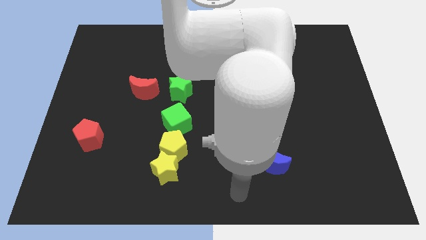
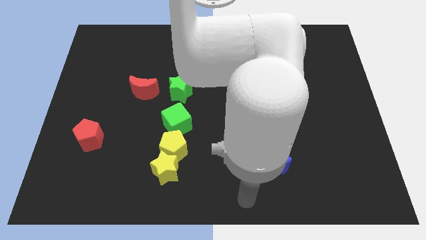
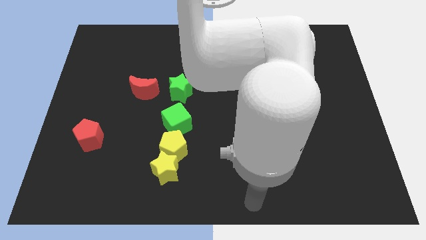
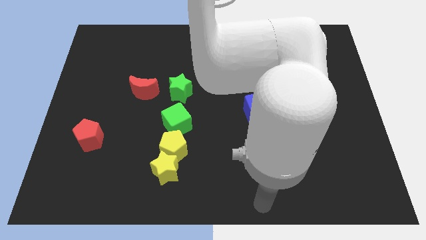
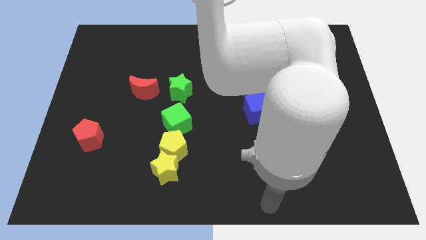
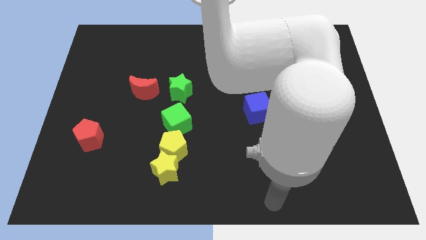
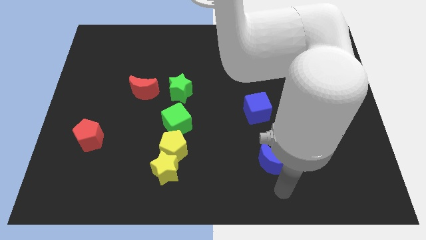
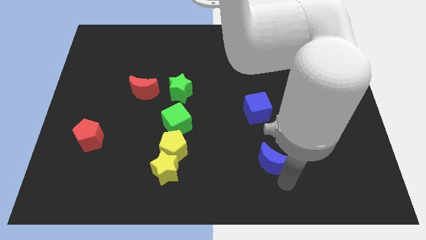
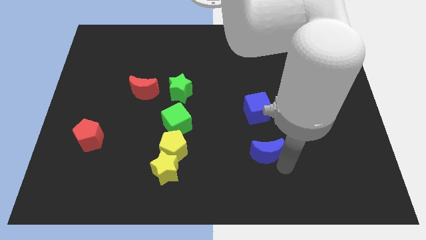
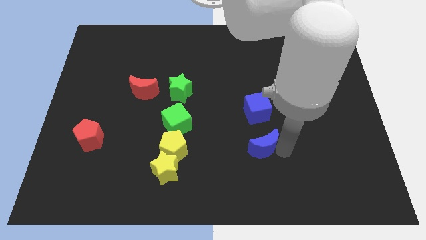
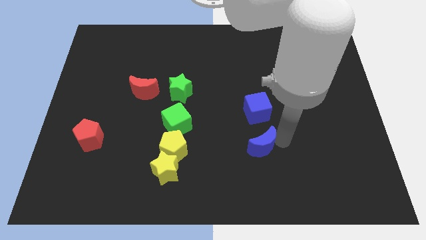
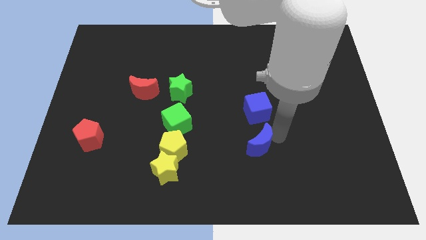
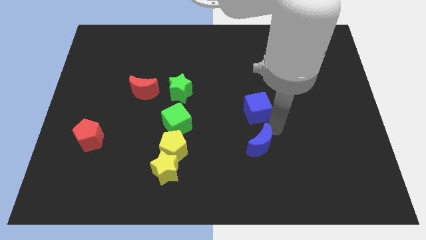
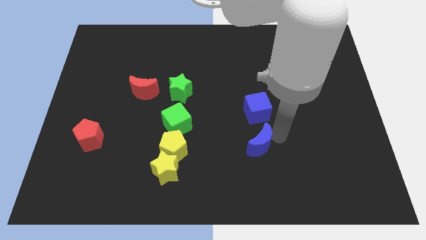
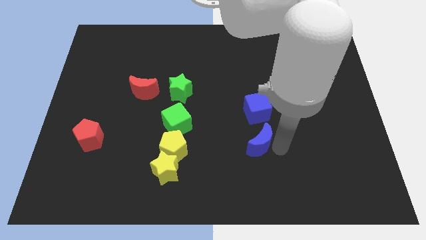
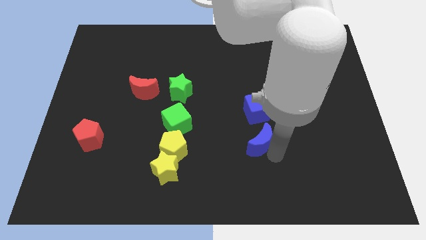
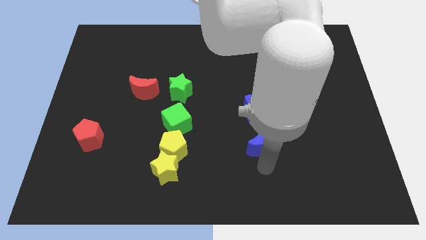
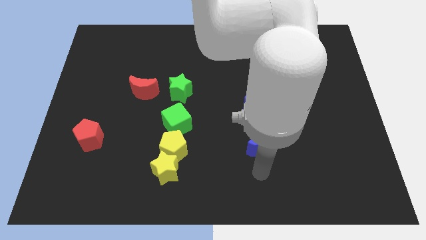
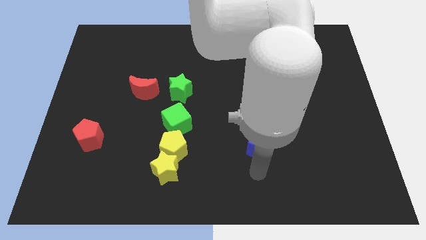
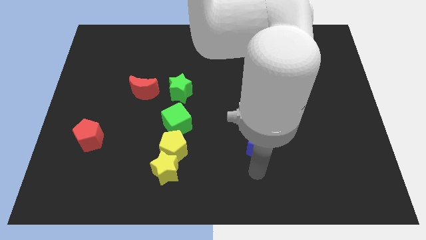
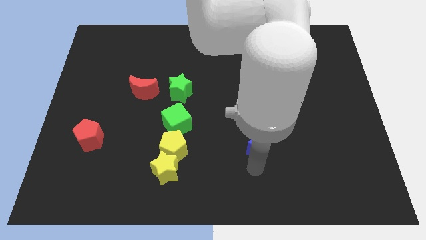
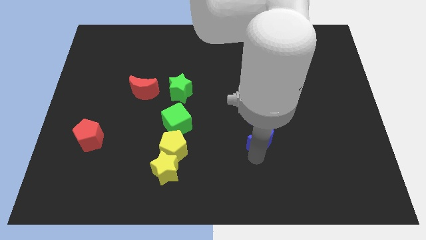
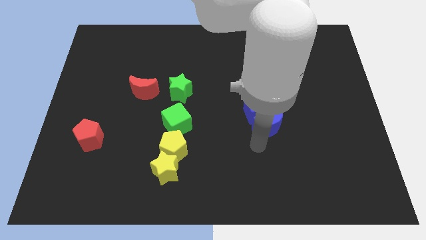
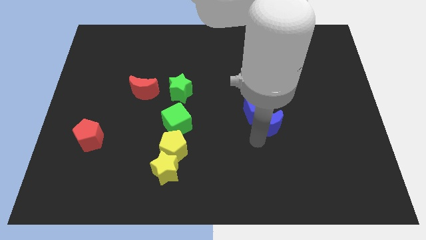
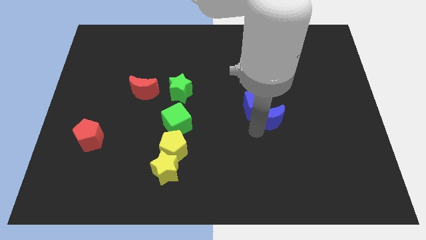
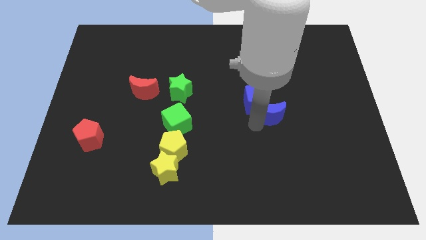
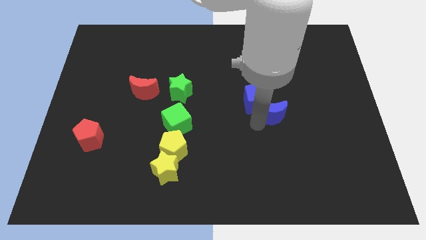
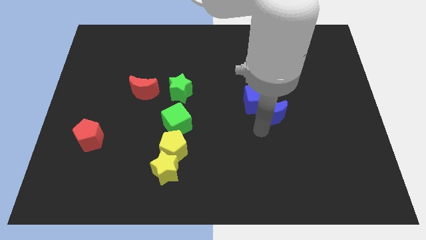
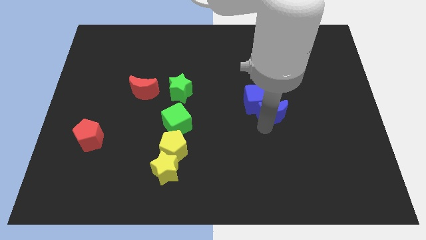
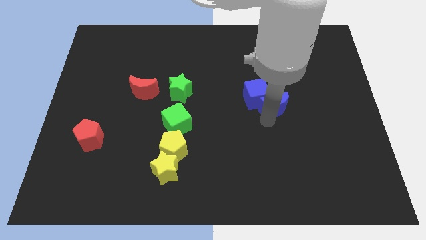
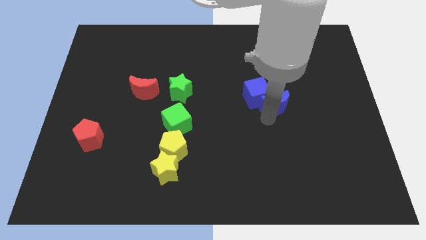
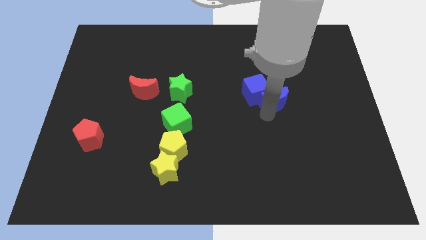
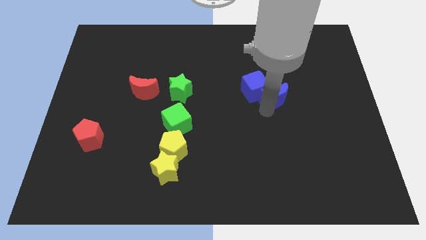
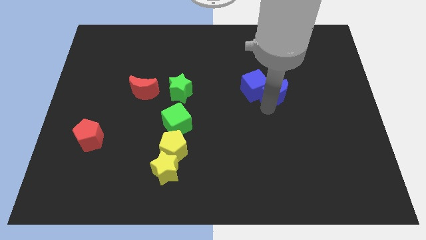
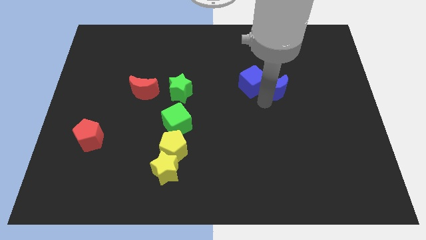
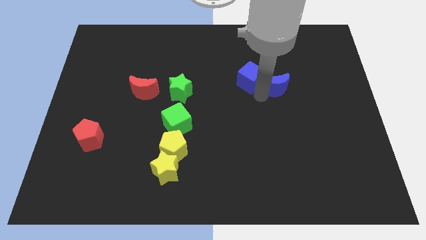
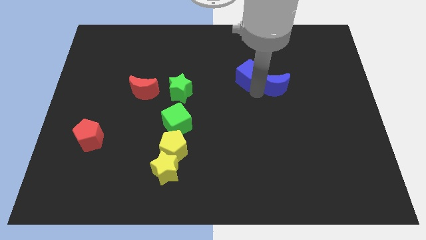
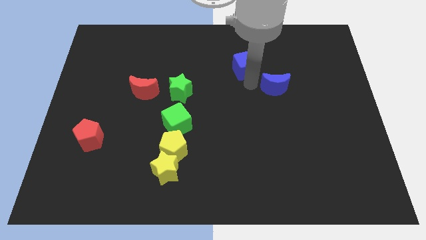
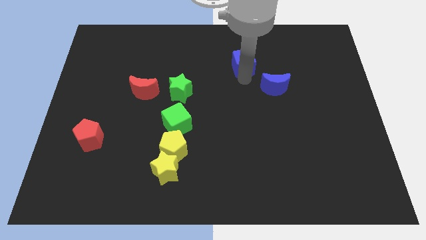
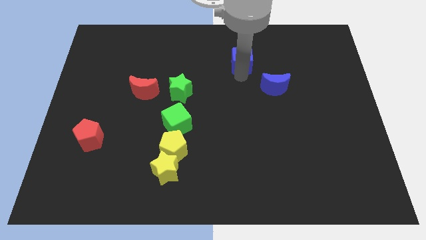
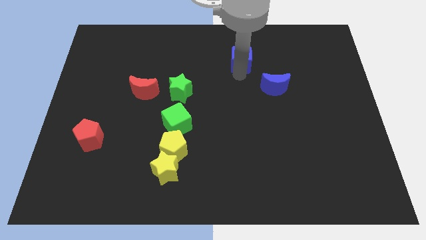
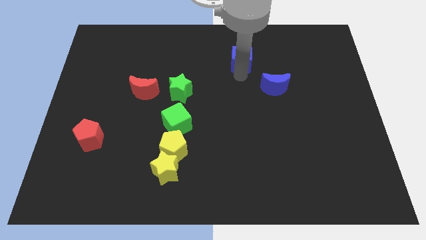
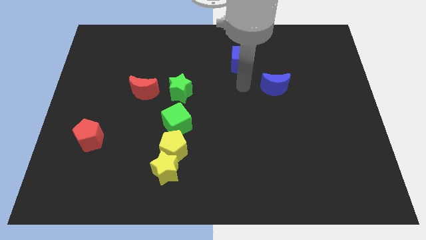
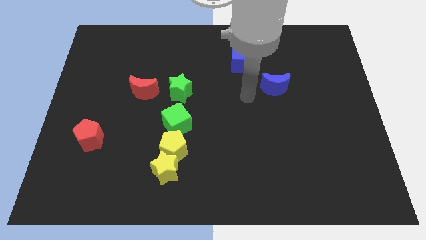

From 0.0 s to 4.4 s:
place your arm to the bottom of blue cube

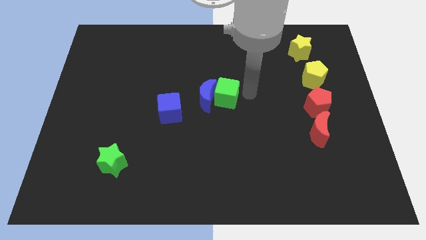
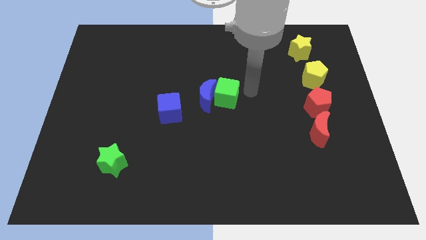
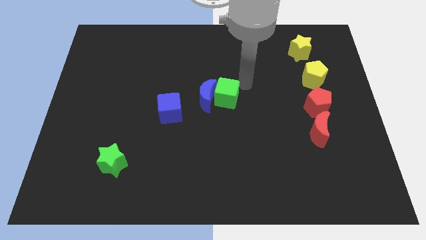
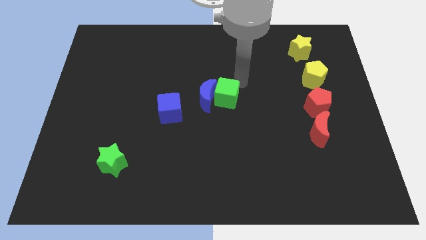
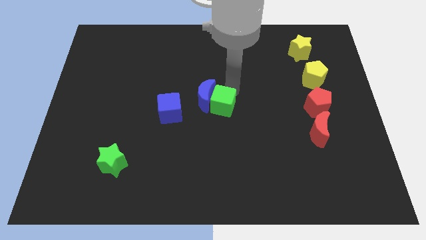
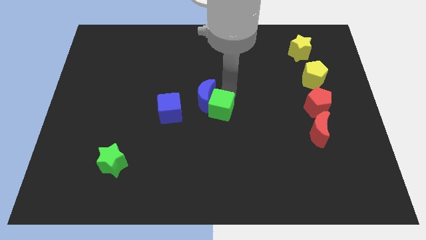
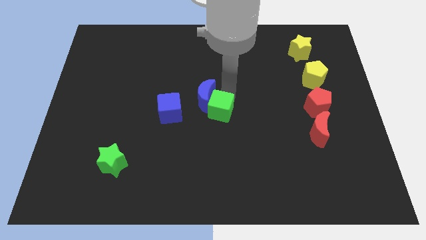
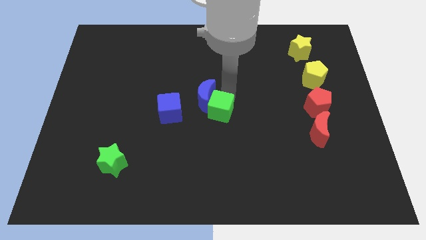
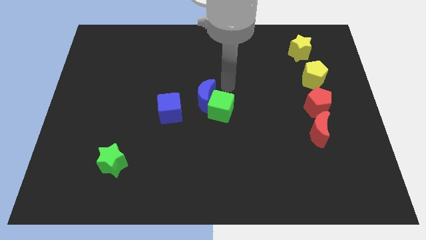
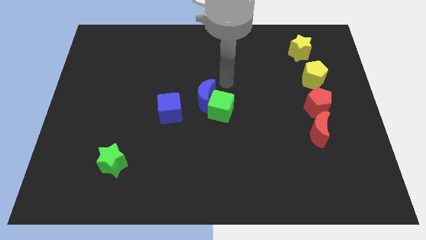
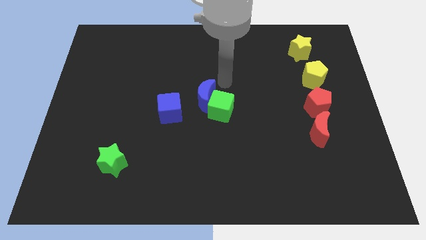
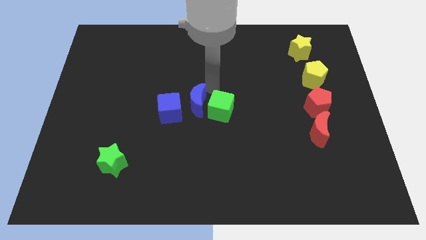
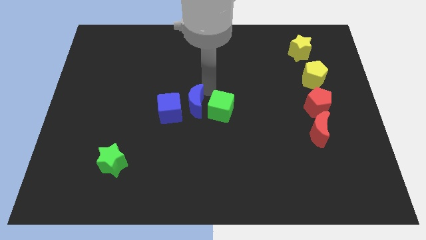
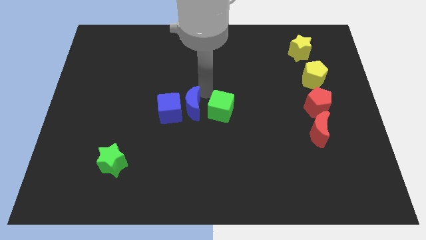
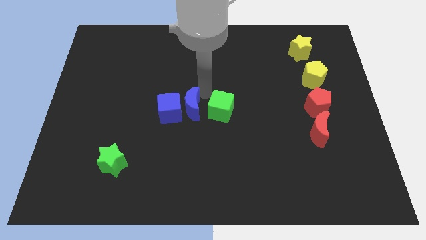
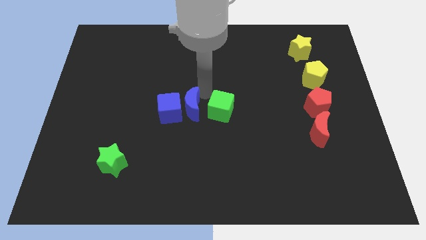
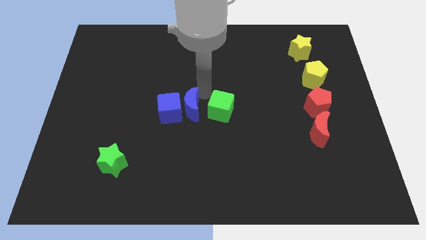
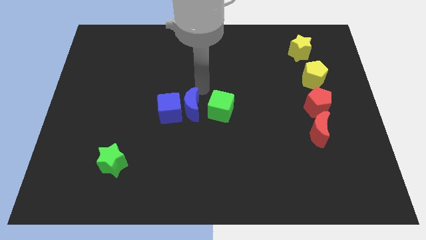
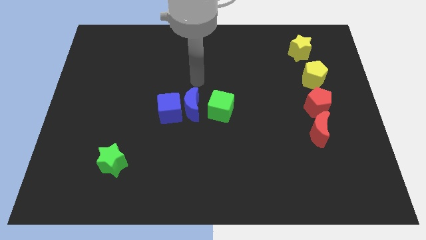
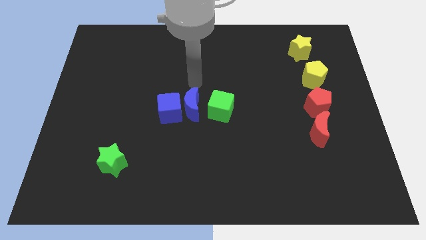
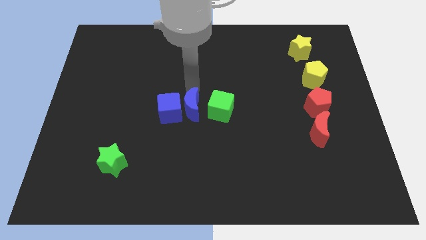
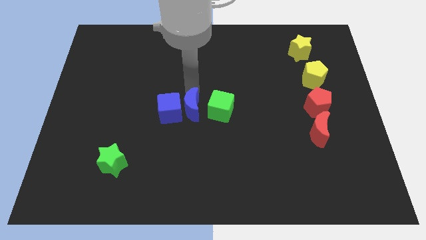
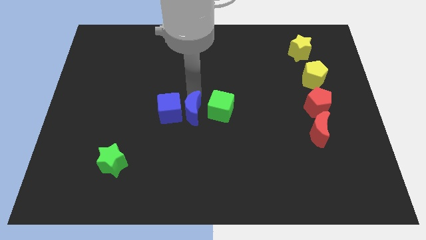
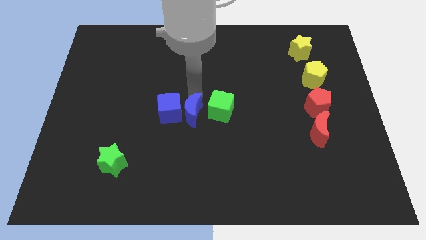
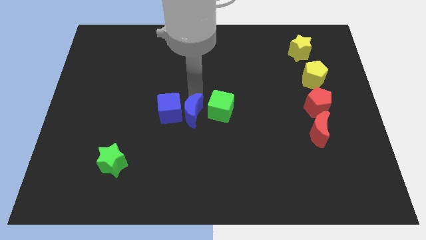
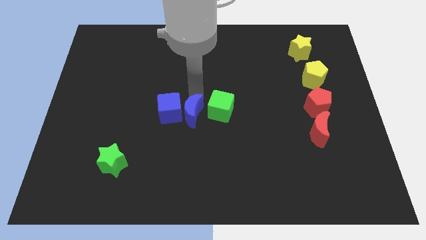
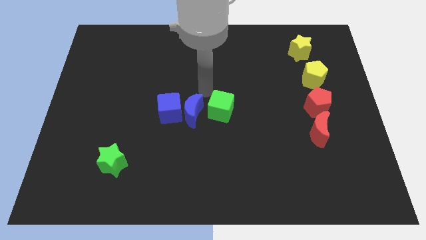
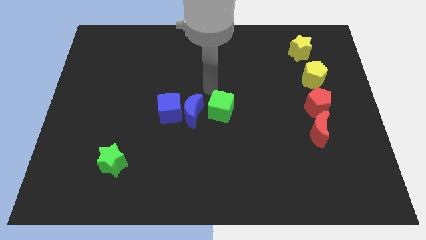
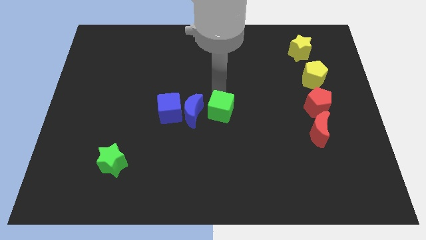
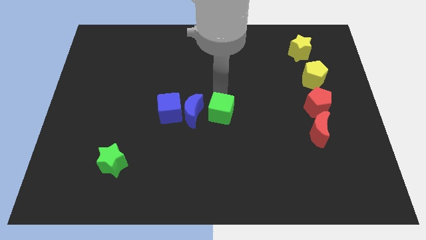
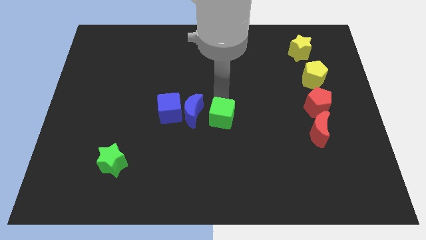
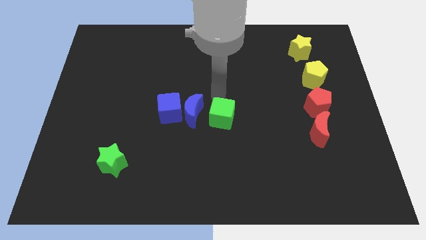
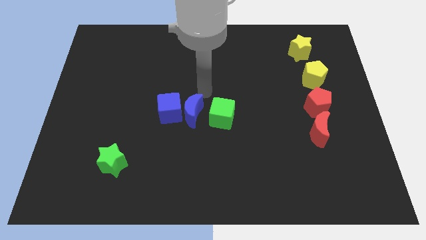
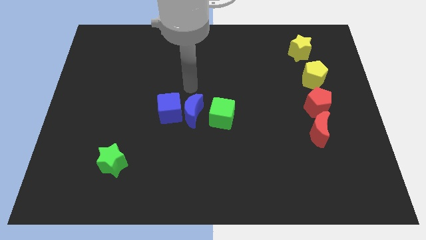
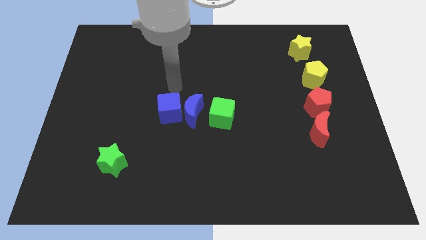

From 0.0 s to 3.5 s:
slightly move down the blue moon and green cube to center

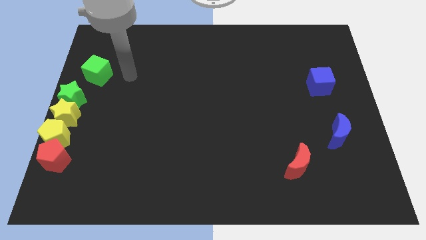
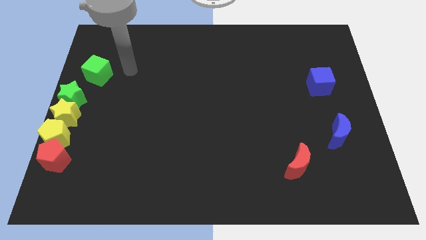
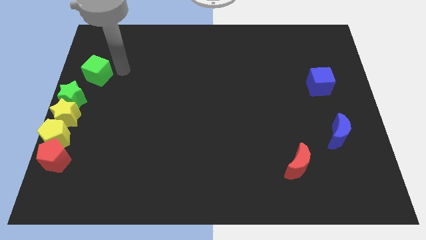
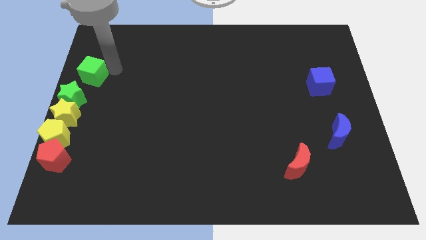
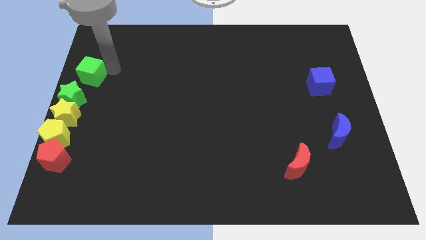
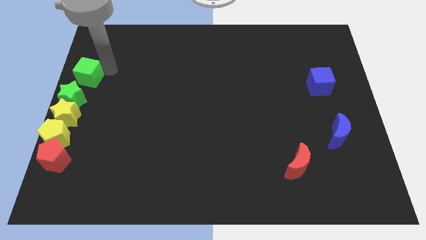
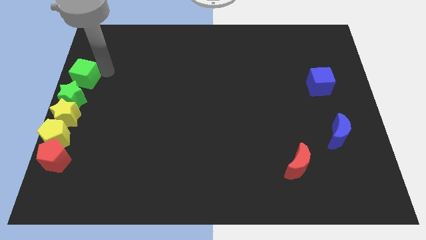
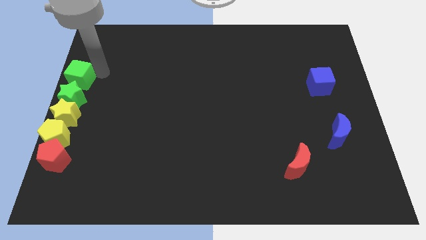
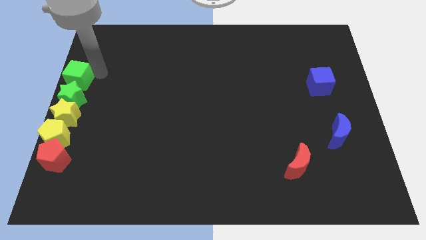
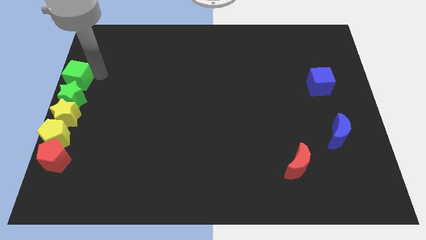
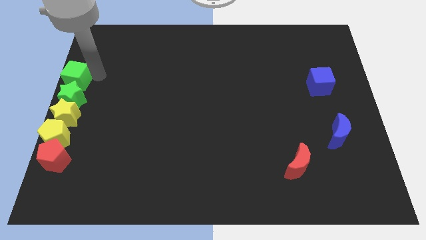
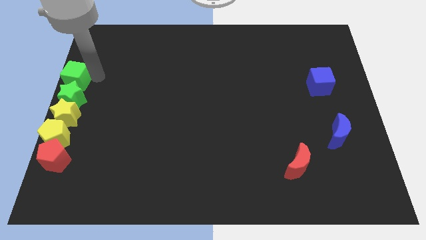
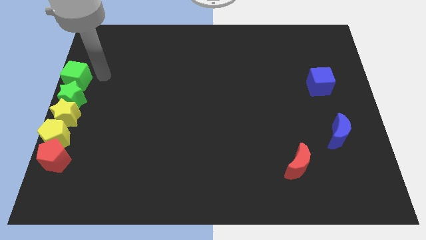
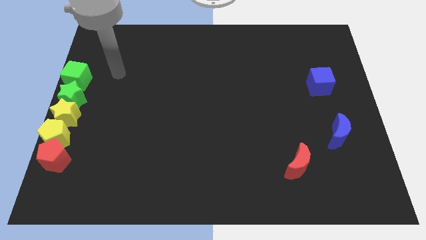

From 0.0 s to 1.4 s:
move green cube above green star
